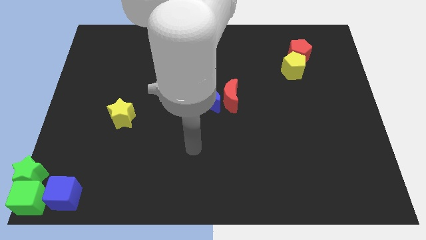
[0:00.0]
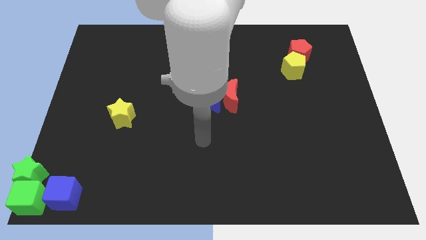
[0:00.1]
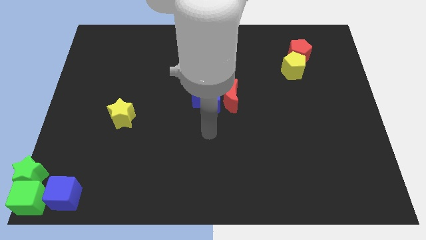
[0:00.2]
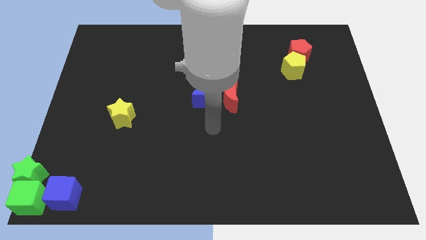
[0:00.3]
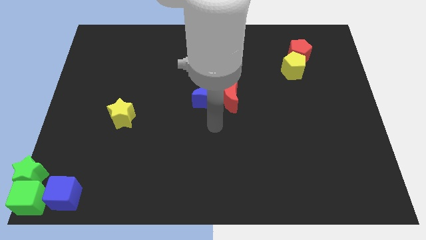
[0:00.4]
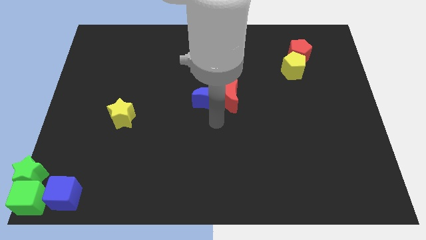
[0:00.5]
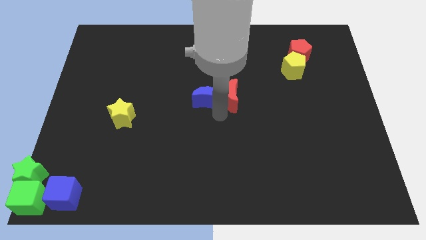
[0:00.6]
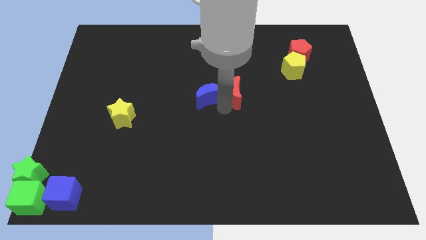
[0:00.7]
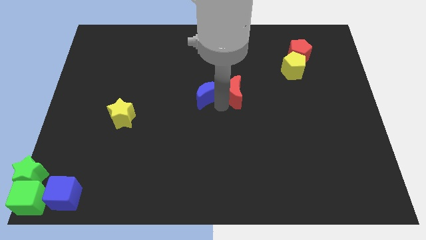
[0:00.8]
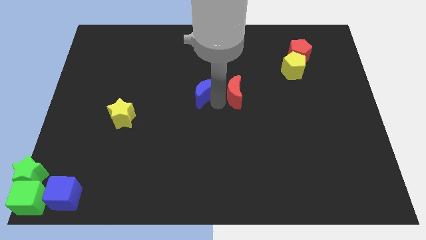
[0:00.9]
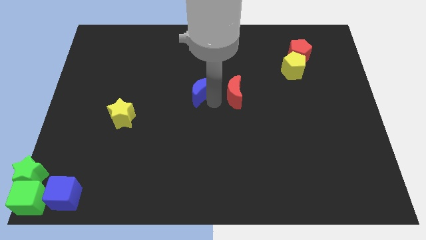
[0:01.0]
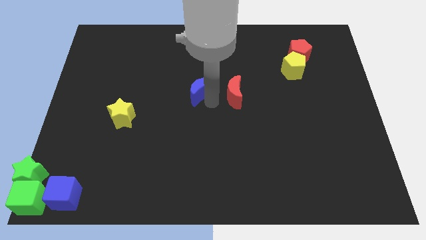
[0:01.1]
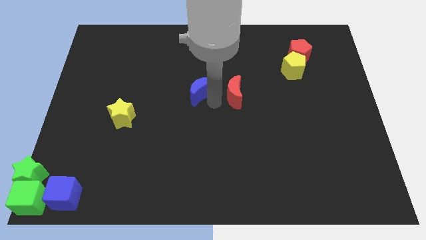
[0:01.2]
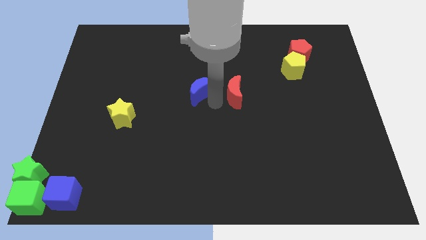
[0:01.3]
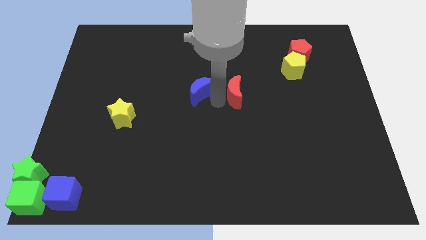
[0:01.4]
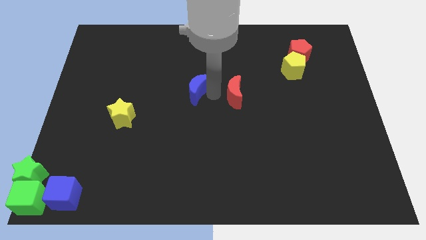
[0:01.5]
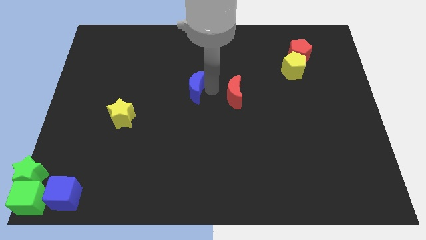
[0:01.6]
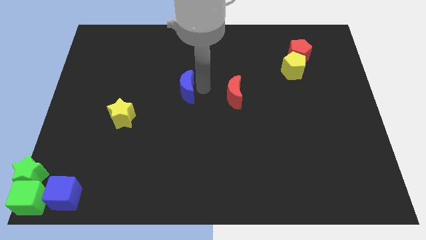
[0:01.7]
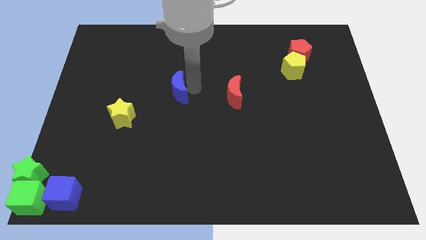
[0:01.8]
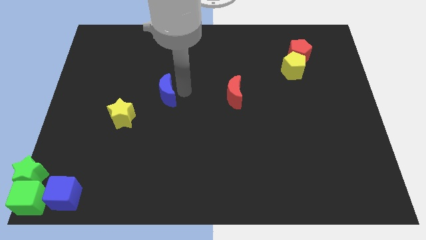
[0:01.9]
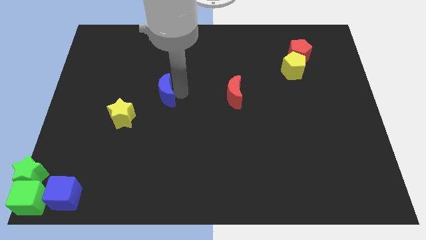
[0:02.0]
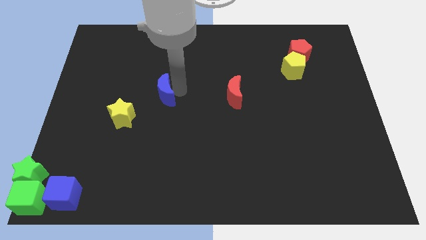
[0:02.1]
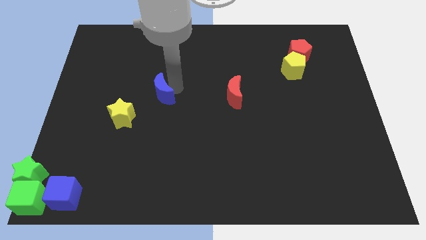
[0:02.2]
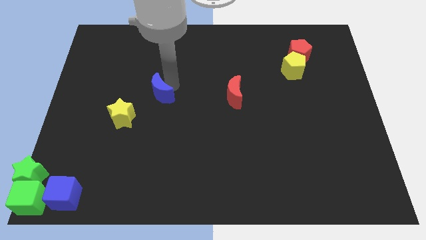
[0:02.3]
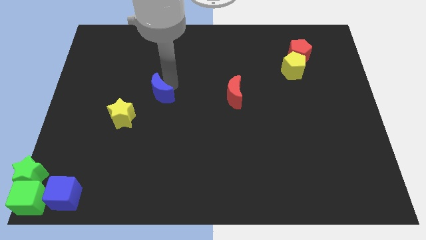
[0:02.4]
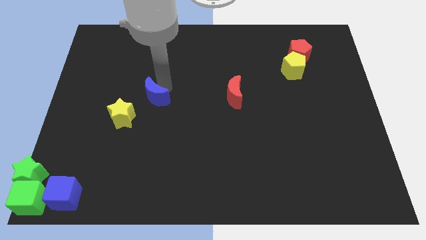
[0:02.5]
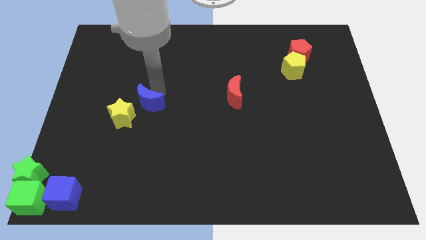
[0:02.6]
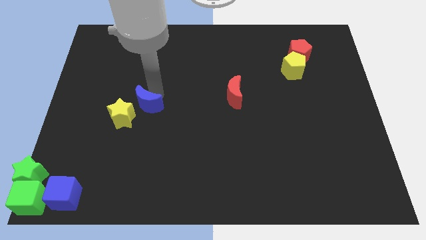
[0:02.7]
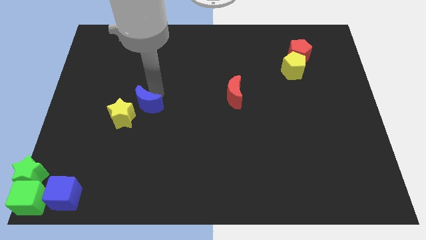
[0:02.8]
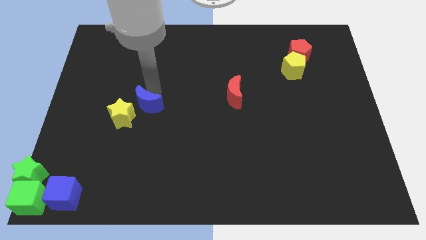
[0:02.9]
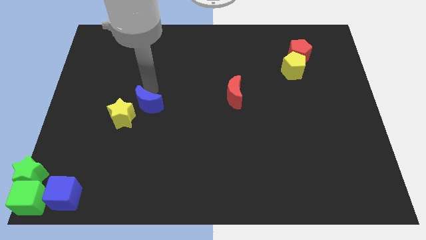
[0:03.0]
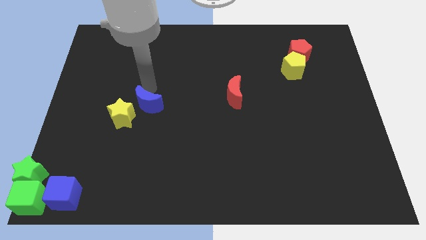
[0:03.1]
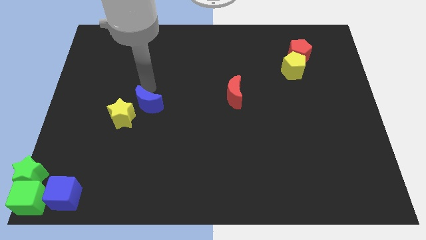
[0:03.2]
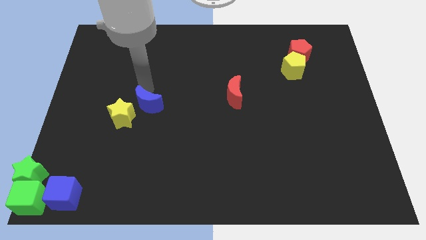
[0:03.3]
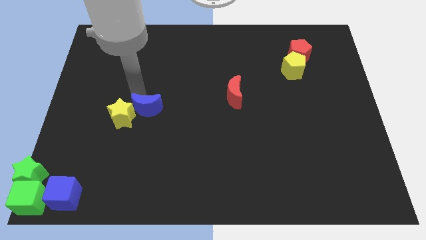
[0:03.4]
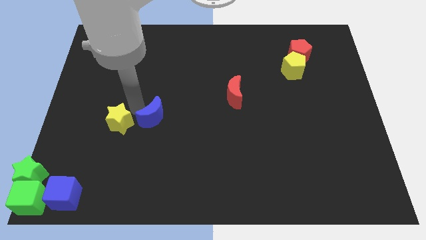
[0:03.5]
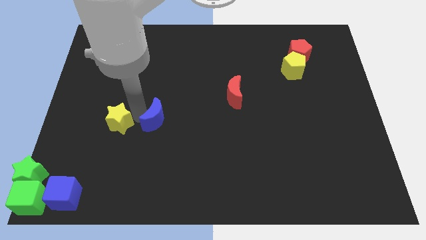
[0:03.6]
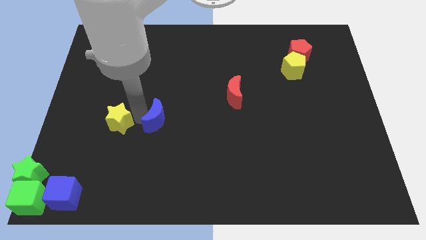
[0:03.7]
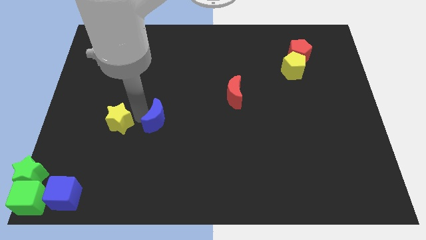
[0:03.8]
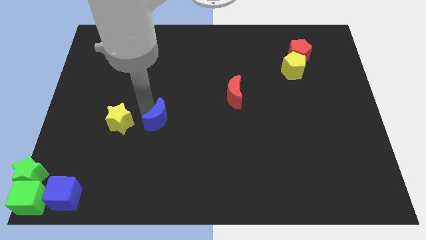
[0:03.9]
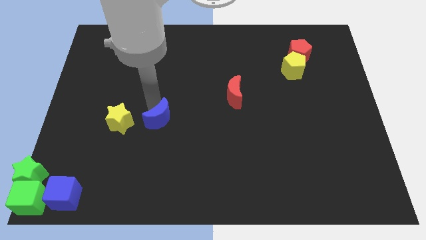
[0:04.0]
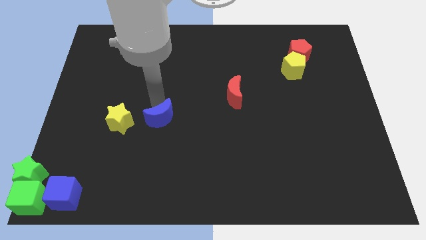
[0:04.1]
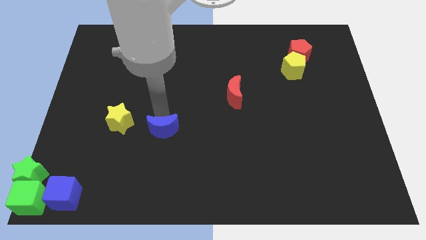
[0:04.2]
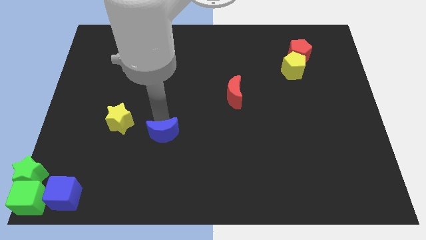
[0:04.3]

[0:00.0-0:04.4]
separate blue moon from red moon

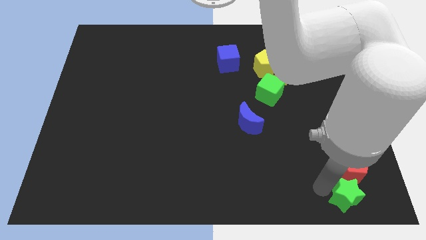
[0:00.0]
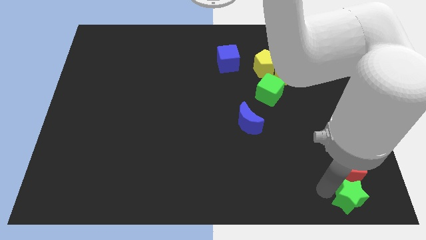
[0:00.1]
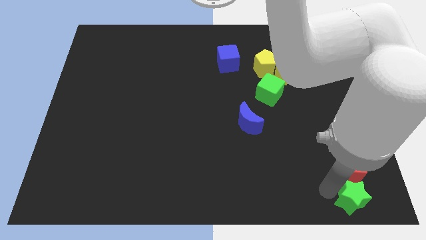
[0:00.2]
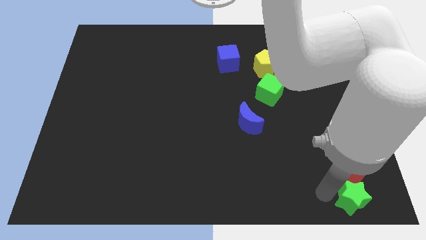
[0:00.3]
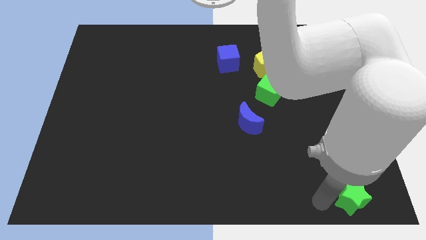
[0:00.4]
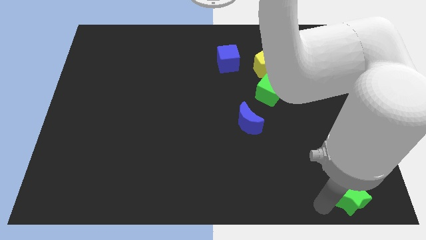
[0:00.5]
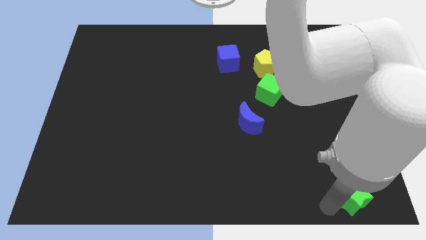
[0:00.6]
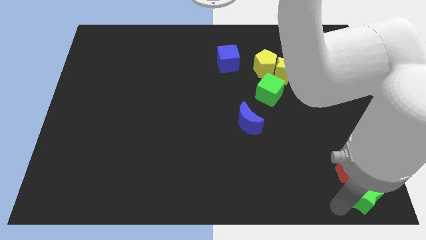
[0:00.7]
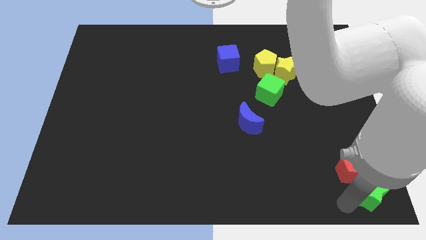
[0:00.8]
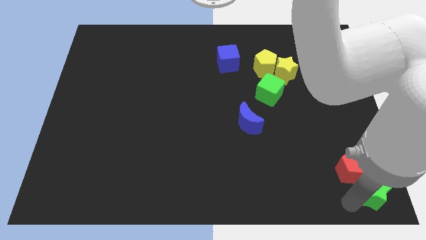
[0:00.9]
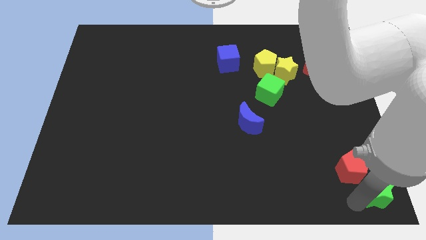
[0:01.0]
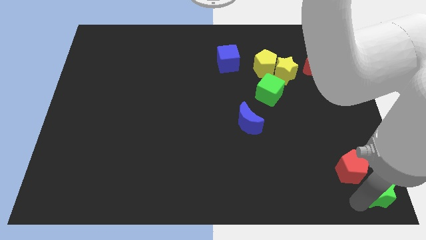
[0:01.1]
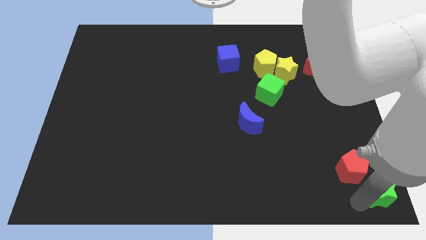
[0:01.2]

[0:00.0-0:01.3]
push the green star to the bottom right of the red pentagon

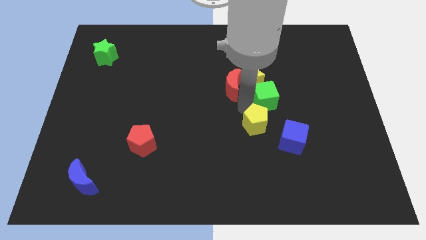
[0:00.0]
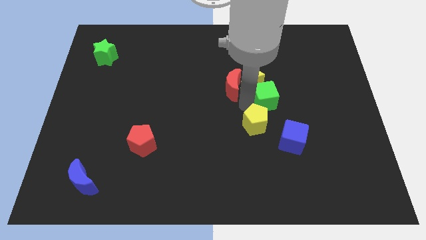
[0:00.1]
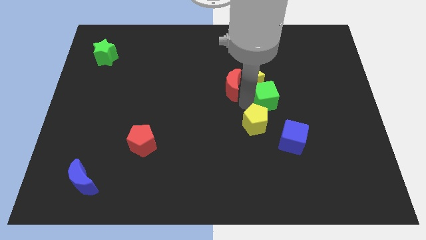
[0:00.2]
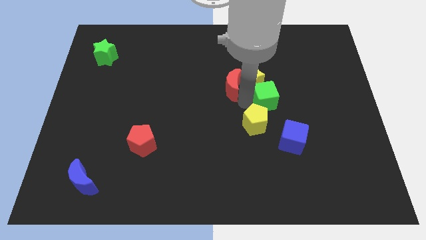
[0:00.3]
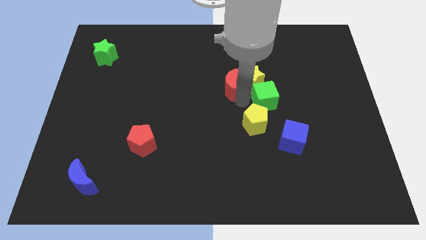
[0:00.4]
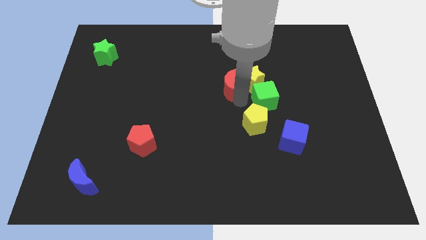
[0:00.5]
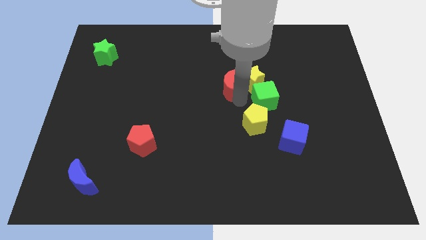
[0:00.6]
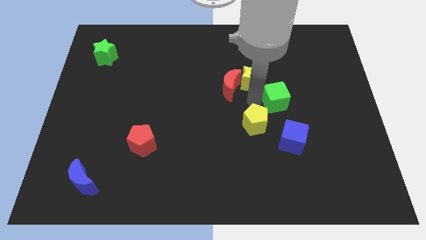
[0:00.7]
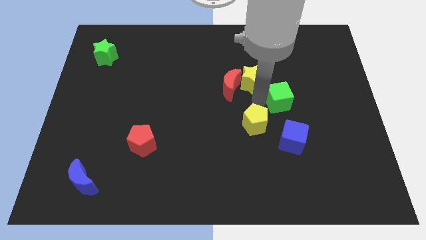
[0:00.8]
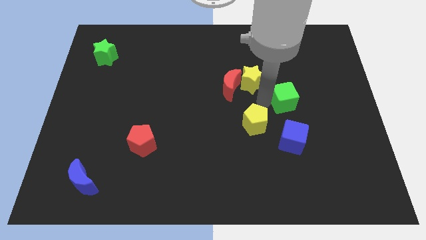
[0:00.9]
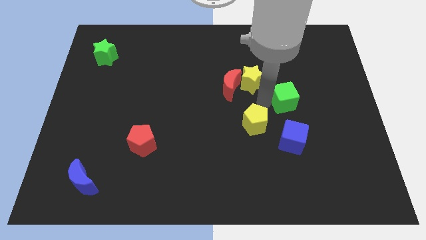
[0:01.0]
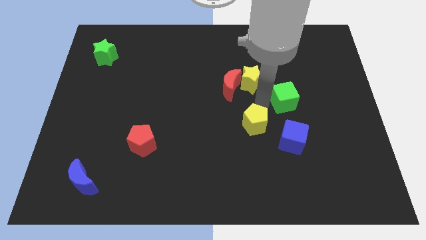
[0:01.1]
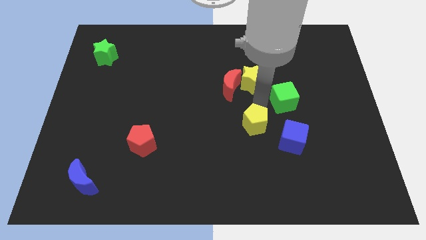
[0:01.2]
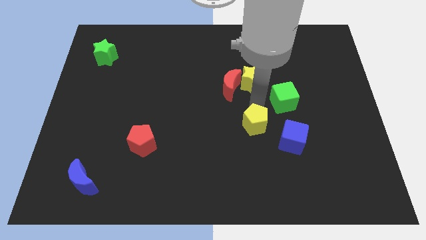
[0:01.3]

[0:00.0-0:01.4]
push green cube away from the yellow blocks

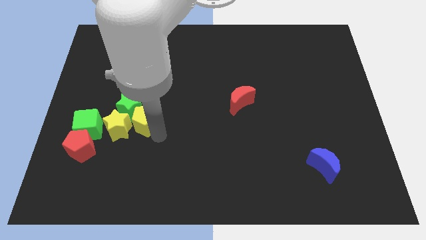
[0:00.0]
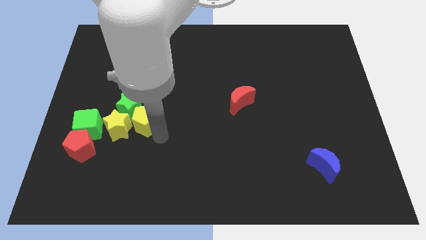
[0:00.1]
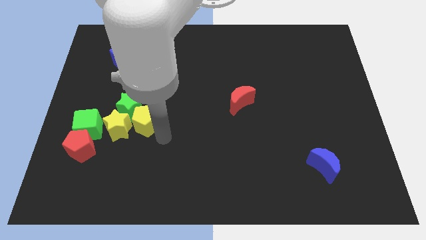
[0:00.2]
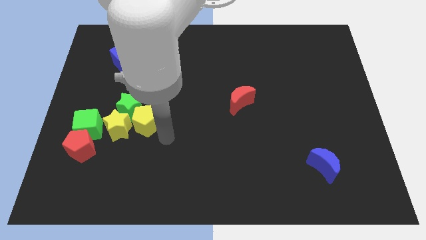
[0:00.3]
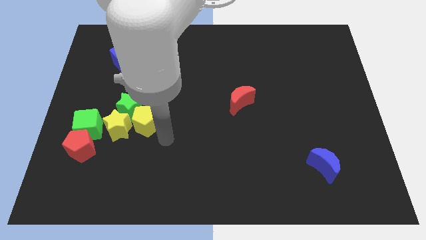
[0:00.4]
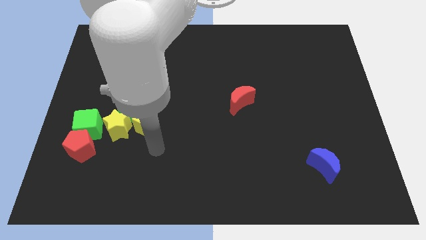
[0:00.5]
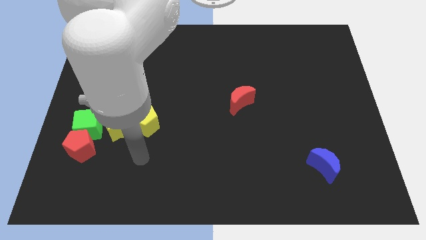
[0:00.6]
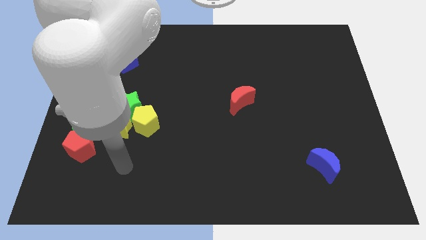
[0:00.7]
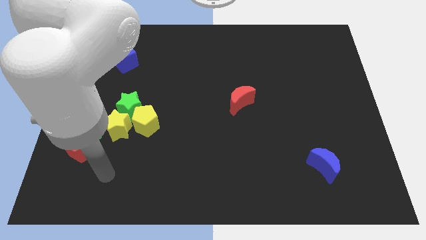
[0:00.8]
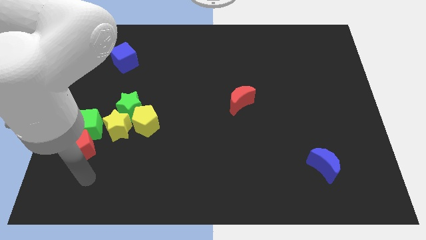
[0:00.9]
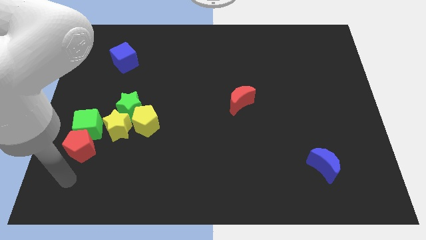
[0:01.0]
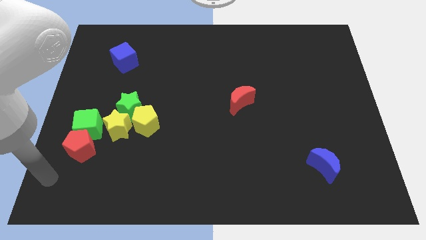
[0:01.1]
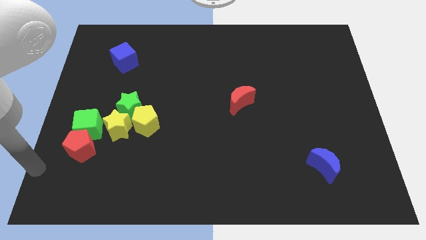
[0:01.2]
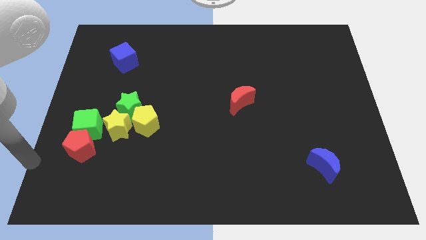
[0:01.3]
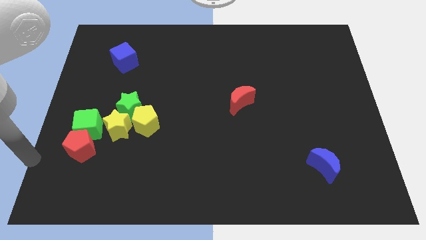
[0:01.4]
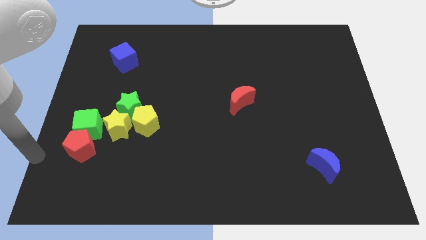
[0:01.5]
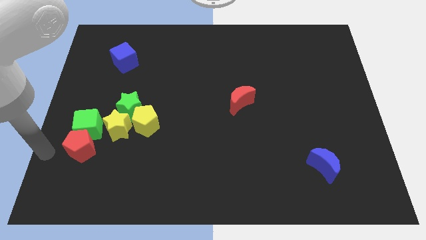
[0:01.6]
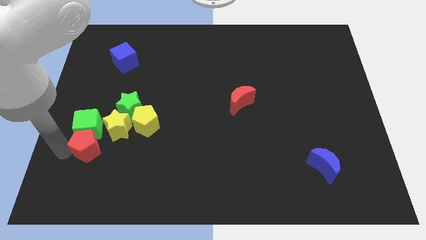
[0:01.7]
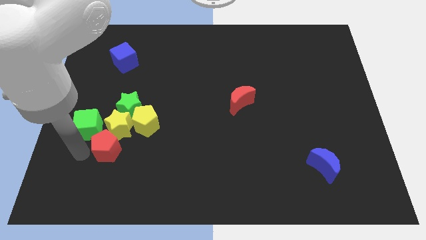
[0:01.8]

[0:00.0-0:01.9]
slightly push the red pentagon

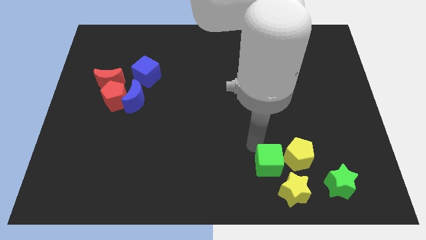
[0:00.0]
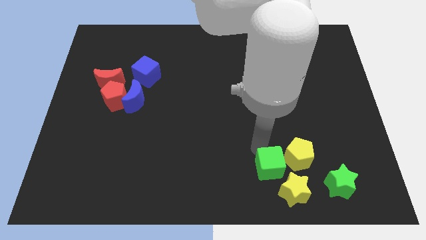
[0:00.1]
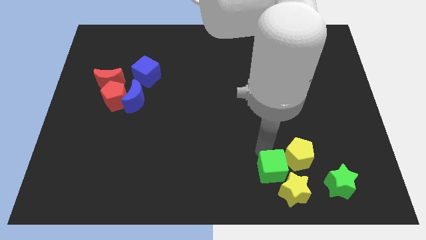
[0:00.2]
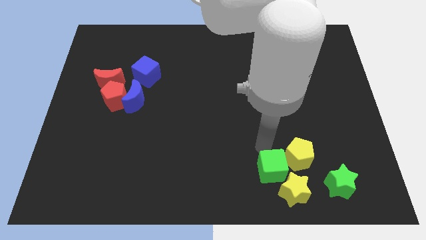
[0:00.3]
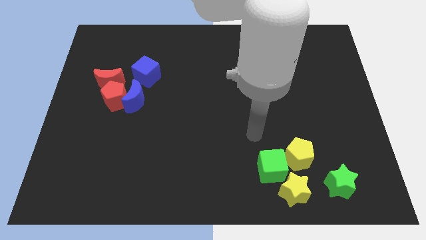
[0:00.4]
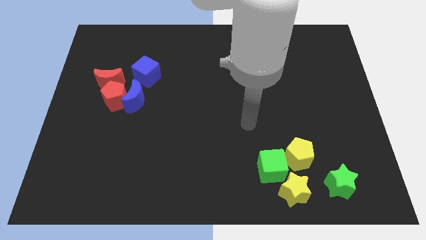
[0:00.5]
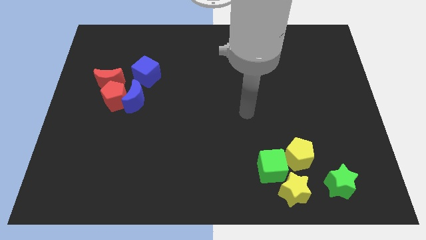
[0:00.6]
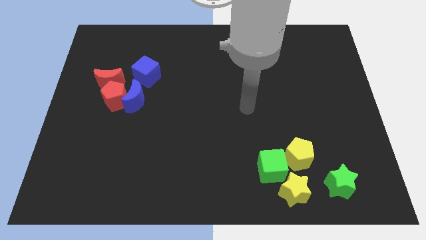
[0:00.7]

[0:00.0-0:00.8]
move your arm away from the green cube
